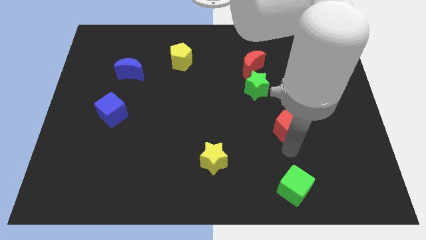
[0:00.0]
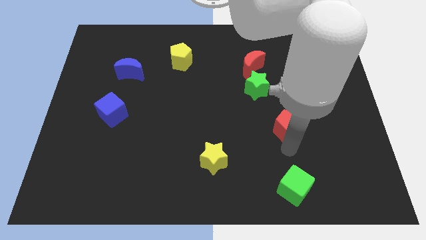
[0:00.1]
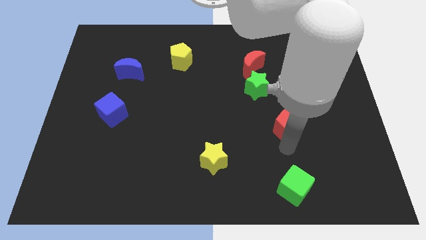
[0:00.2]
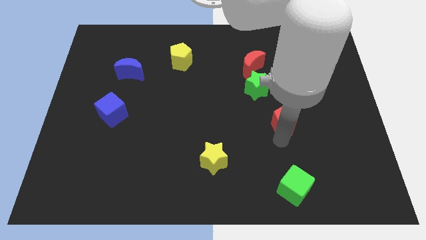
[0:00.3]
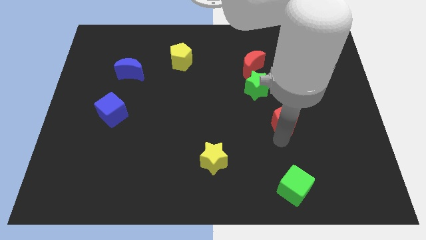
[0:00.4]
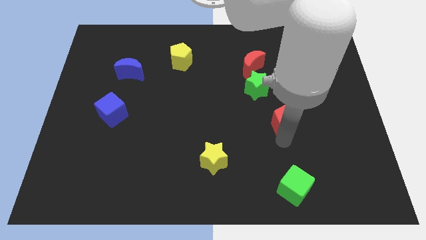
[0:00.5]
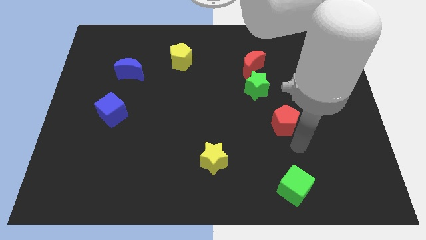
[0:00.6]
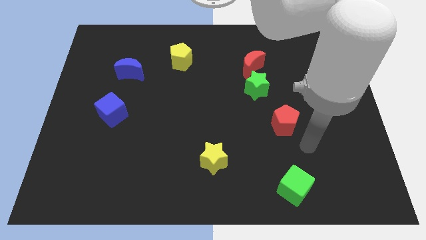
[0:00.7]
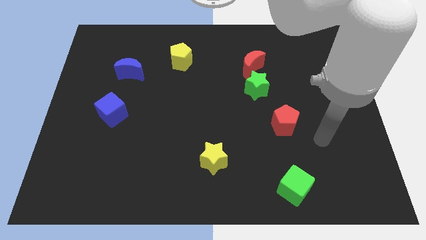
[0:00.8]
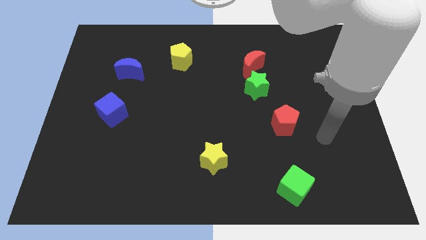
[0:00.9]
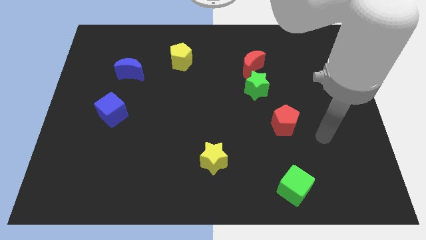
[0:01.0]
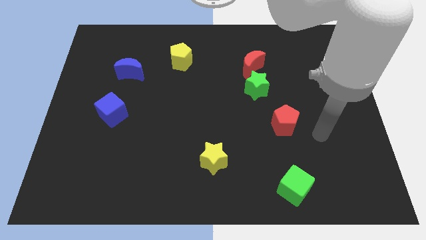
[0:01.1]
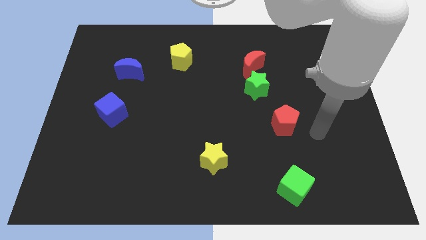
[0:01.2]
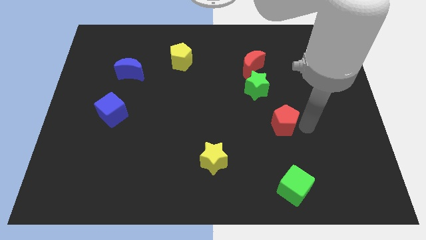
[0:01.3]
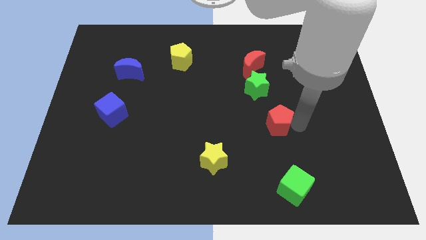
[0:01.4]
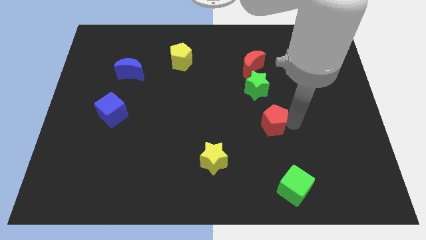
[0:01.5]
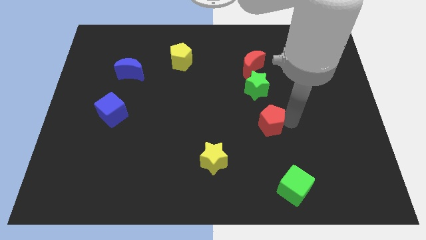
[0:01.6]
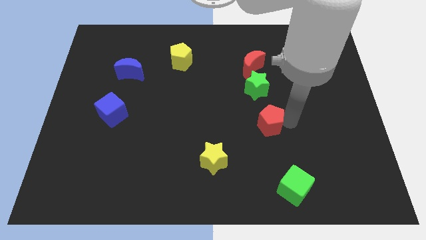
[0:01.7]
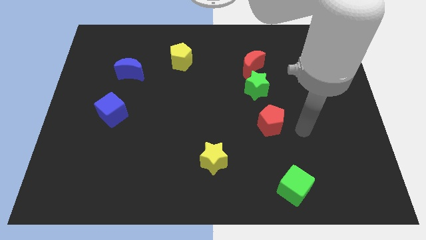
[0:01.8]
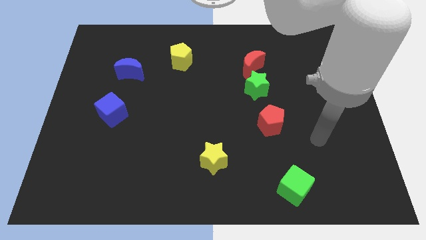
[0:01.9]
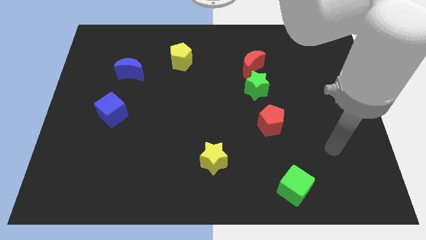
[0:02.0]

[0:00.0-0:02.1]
put the red pentagon diagonal to the yellow star

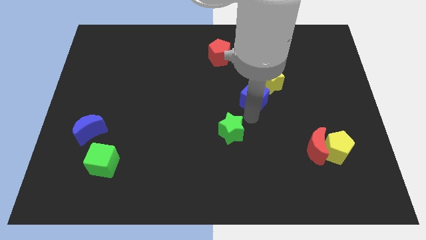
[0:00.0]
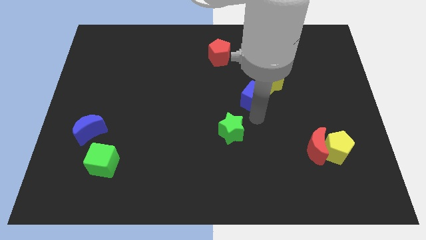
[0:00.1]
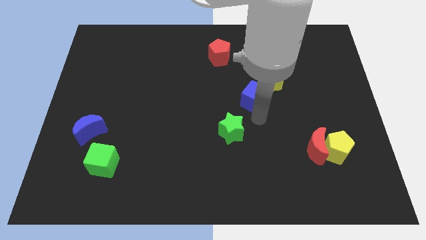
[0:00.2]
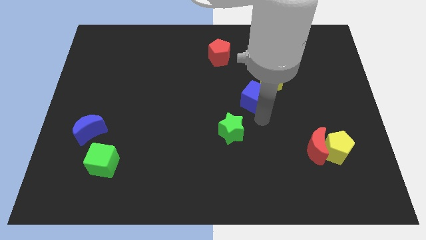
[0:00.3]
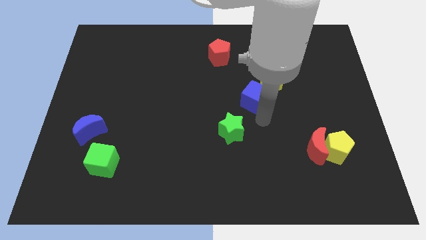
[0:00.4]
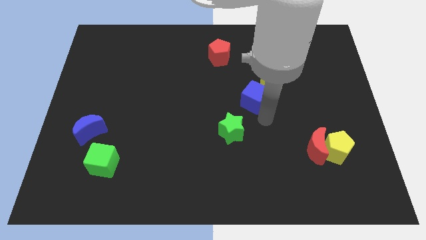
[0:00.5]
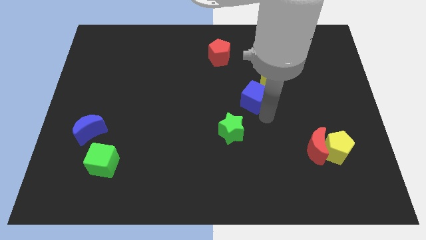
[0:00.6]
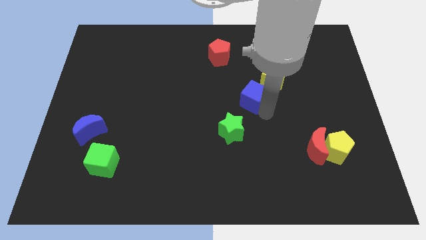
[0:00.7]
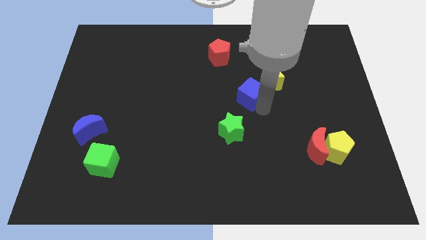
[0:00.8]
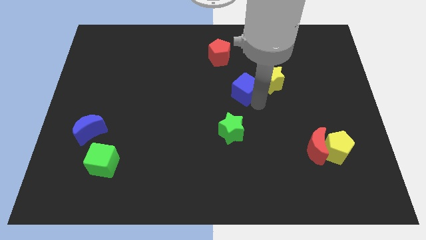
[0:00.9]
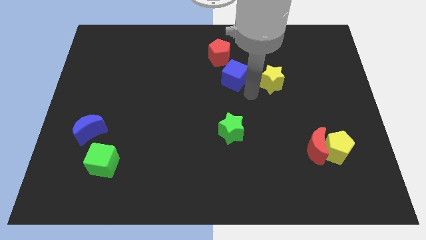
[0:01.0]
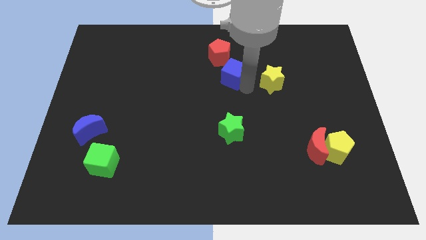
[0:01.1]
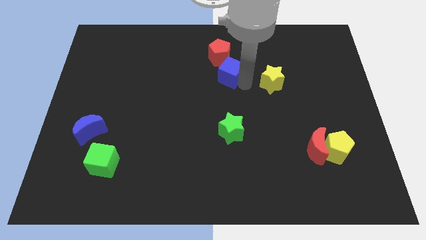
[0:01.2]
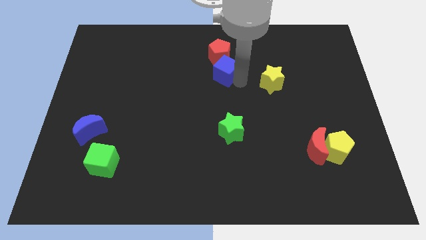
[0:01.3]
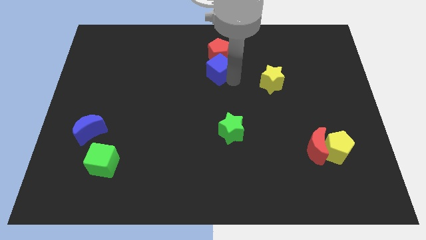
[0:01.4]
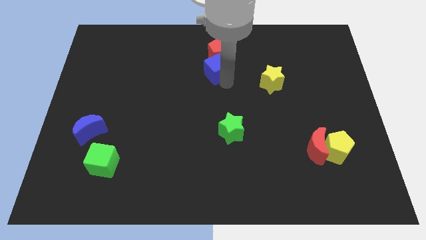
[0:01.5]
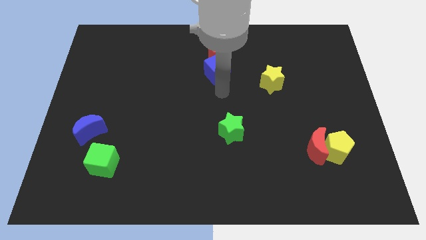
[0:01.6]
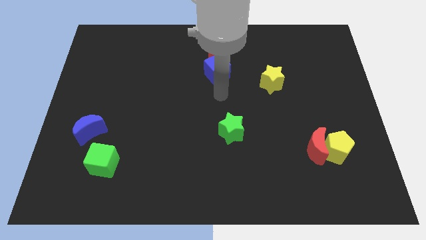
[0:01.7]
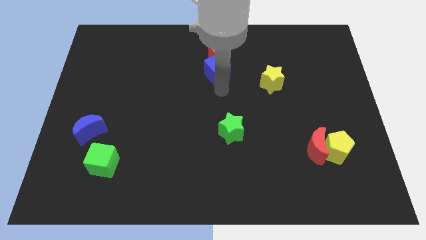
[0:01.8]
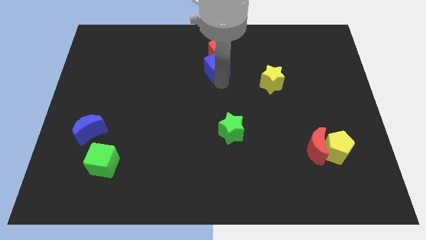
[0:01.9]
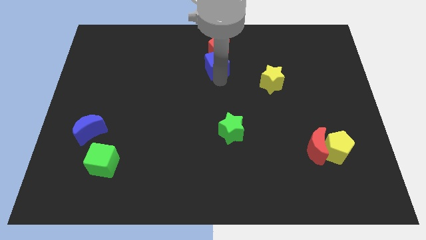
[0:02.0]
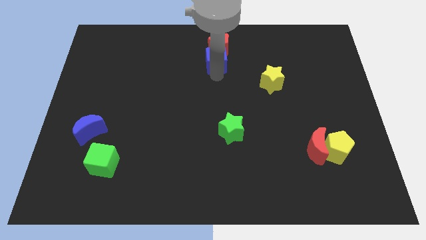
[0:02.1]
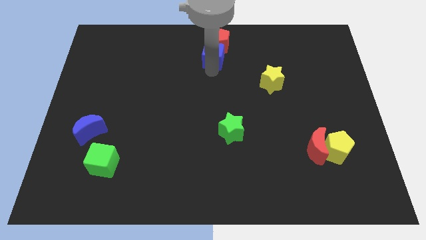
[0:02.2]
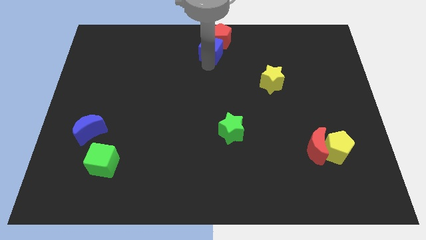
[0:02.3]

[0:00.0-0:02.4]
push blue cube slightly towards upward

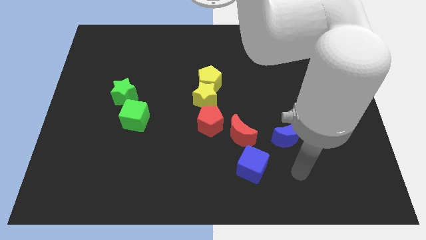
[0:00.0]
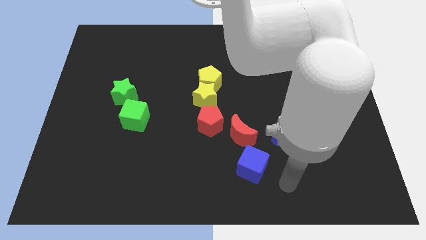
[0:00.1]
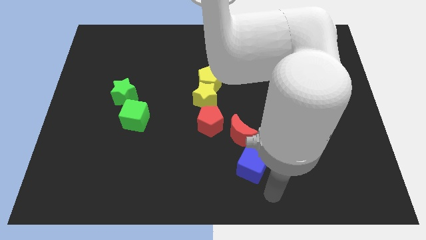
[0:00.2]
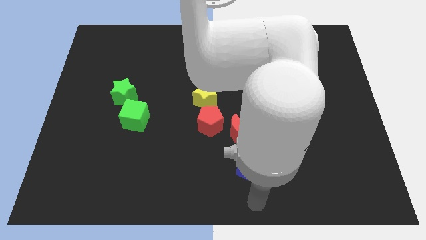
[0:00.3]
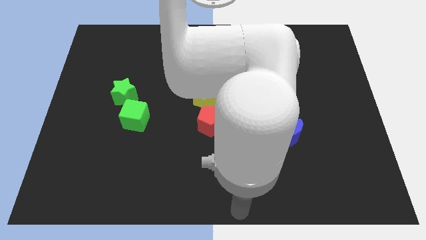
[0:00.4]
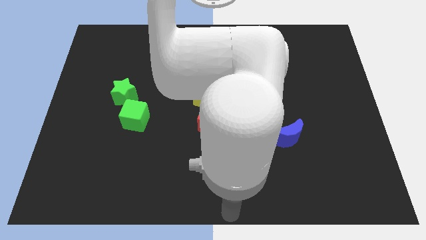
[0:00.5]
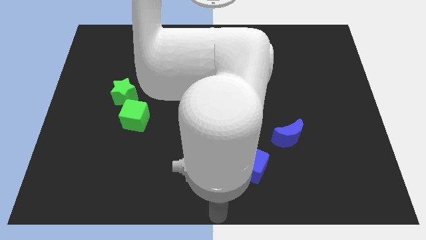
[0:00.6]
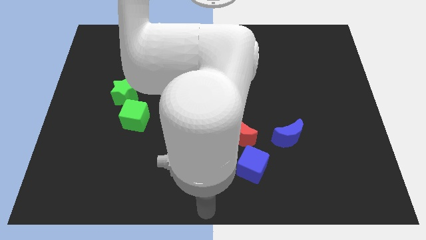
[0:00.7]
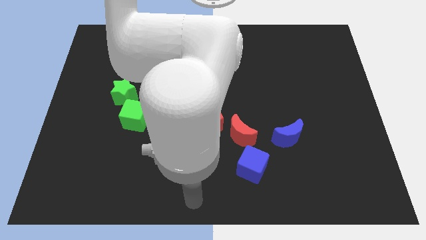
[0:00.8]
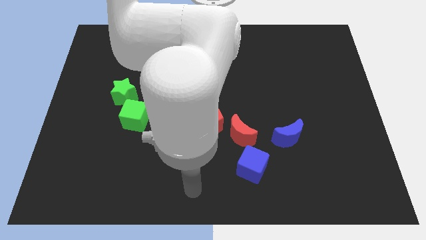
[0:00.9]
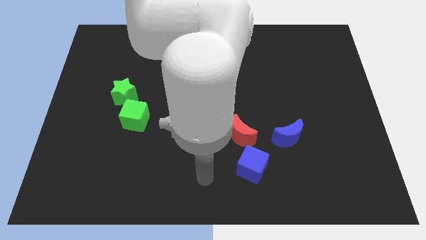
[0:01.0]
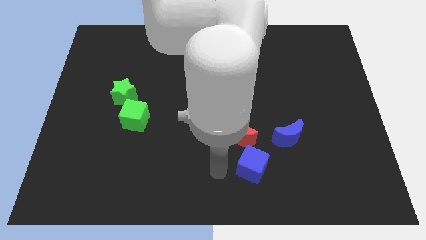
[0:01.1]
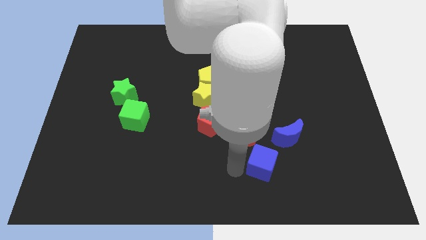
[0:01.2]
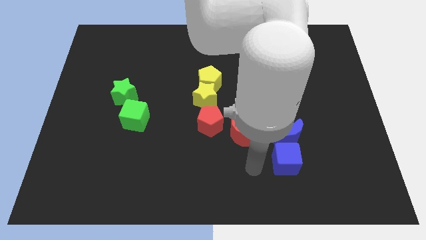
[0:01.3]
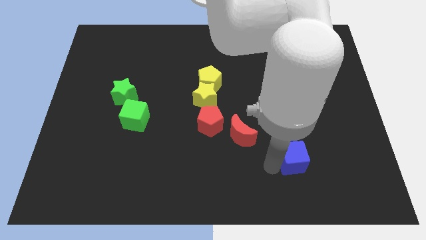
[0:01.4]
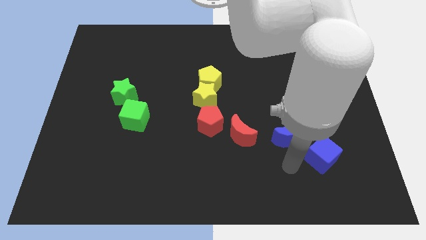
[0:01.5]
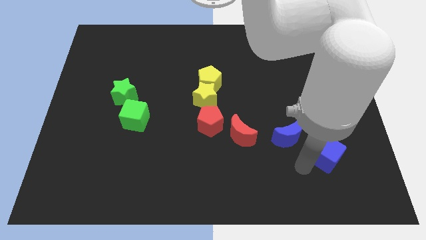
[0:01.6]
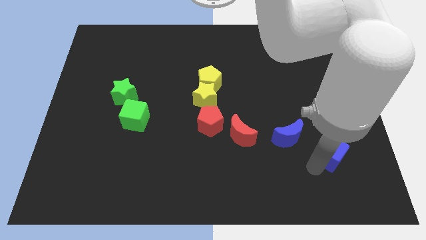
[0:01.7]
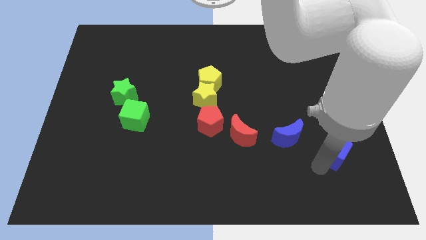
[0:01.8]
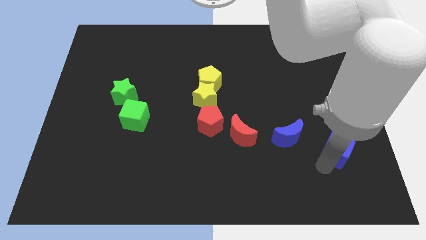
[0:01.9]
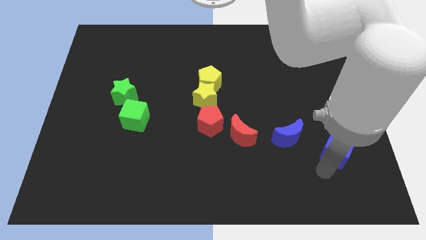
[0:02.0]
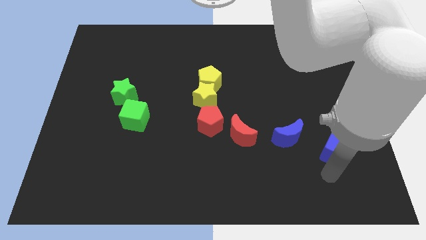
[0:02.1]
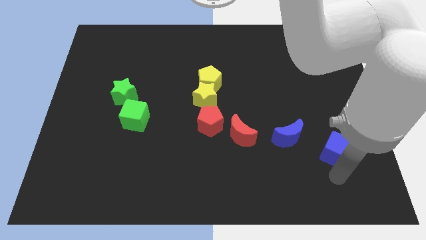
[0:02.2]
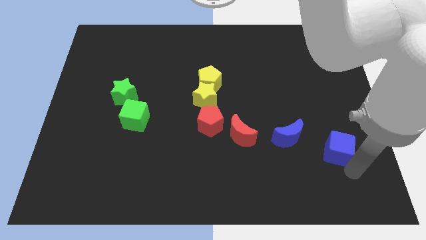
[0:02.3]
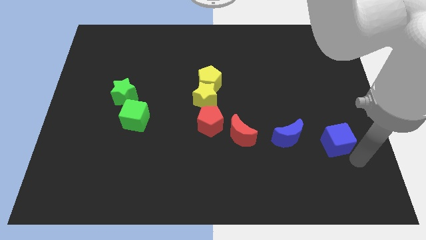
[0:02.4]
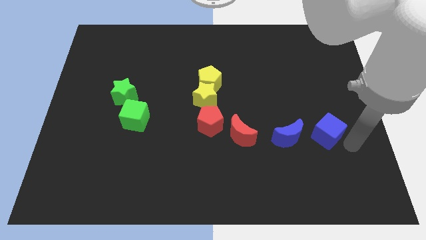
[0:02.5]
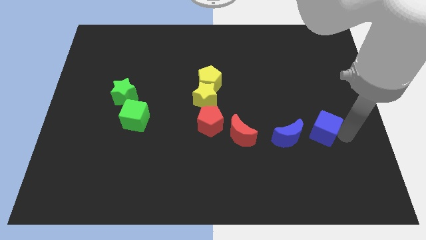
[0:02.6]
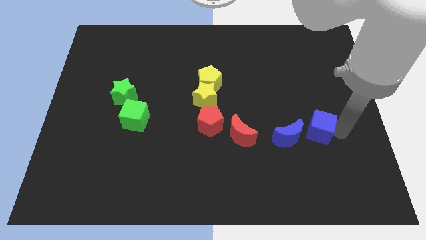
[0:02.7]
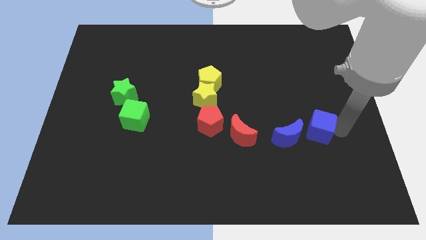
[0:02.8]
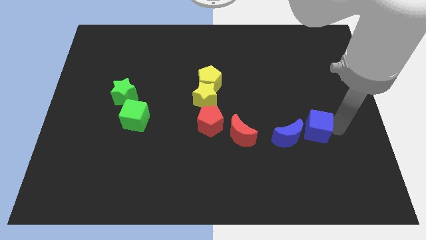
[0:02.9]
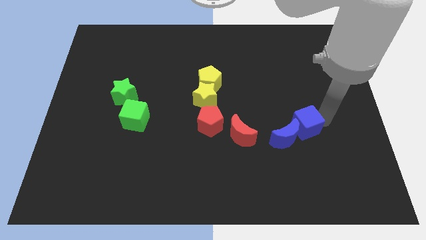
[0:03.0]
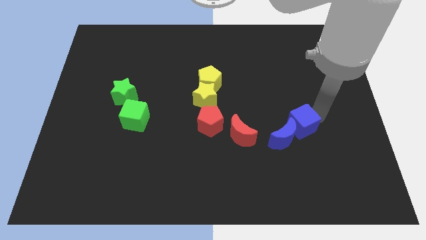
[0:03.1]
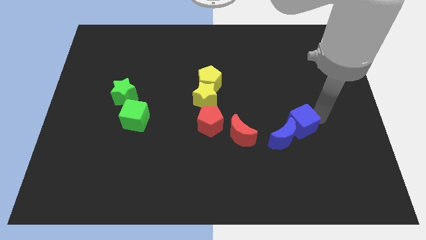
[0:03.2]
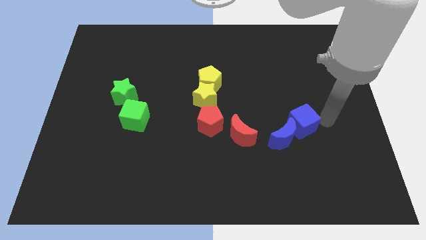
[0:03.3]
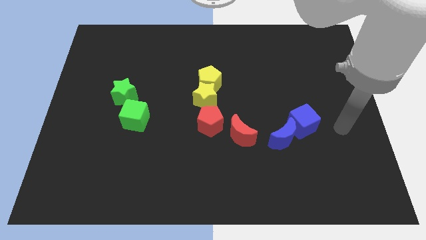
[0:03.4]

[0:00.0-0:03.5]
push the blue cube to the top right of the blue moon

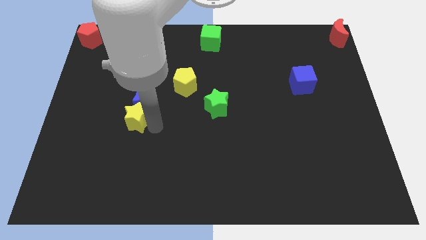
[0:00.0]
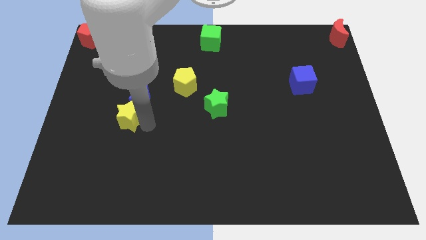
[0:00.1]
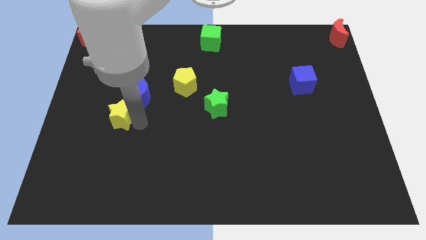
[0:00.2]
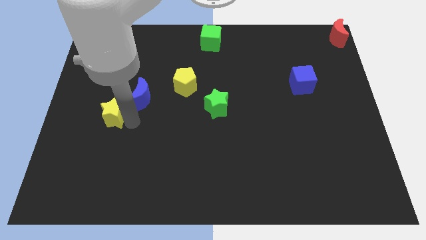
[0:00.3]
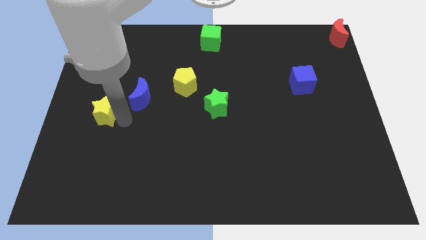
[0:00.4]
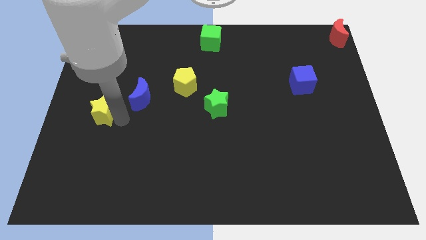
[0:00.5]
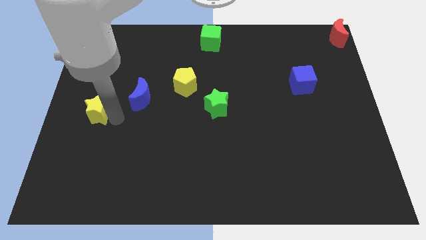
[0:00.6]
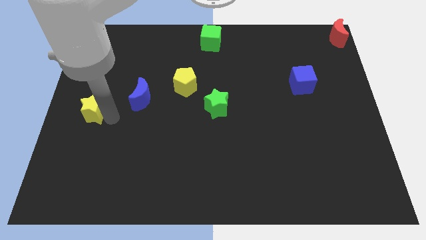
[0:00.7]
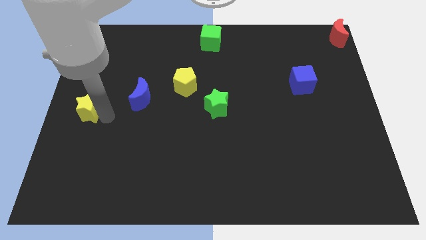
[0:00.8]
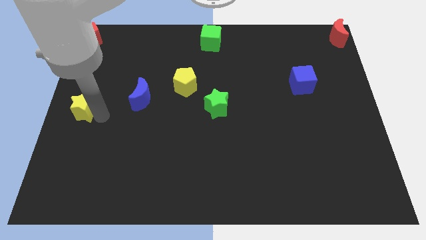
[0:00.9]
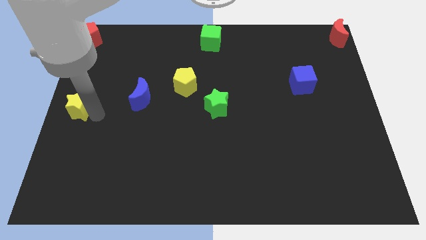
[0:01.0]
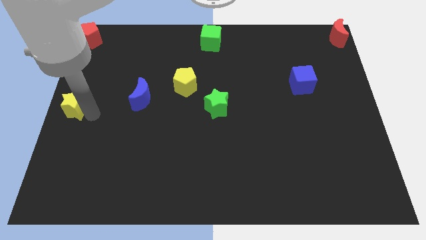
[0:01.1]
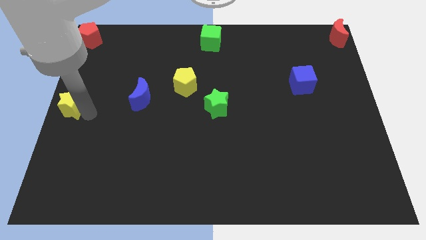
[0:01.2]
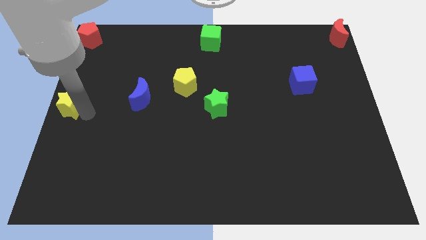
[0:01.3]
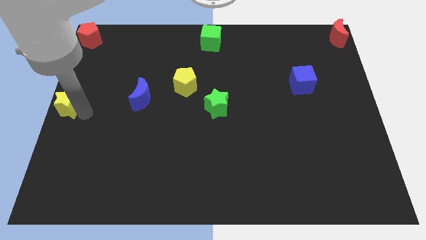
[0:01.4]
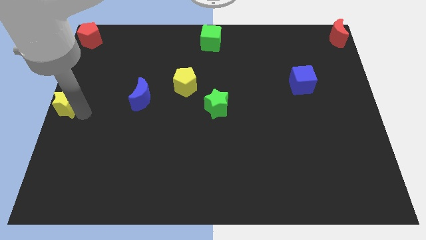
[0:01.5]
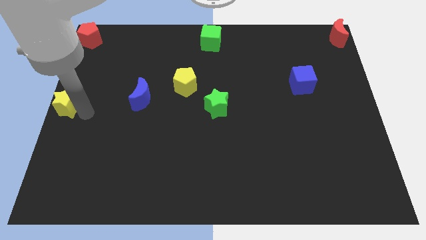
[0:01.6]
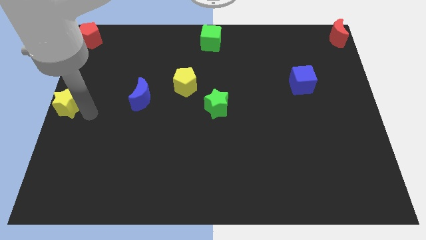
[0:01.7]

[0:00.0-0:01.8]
push the yellow star to the left centre of the board
